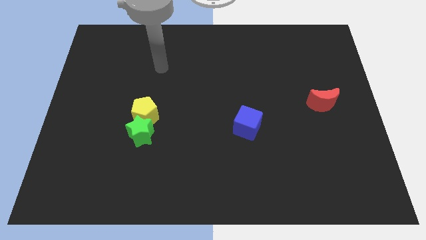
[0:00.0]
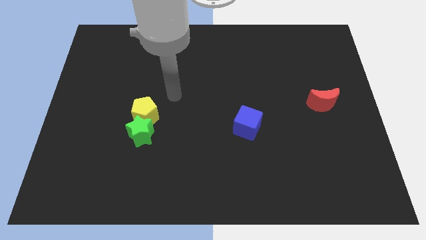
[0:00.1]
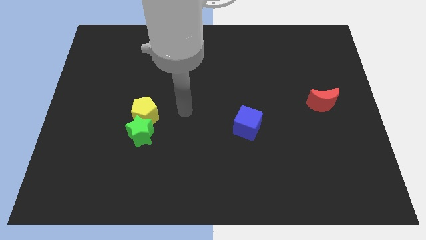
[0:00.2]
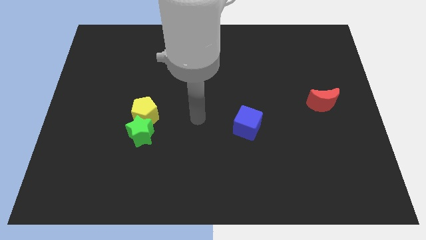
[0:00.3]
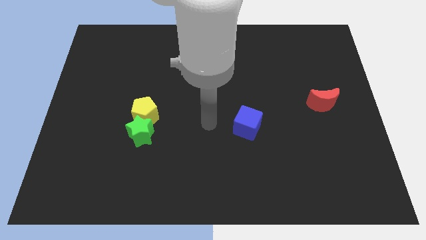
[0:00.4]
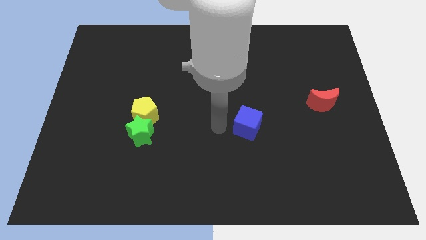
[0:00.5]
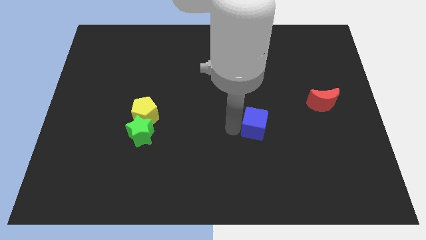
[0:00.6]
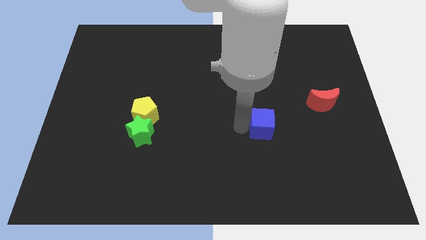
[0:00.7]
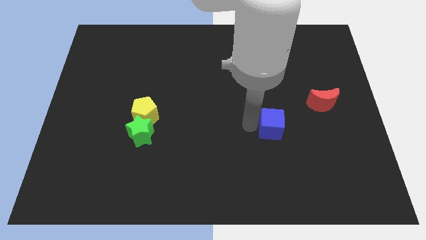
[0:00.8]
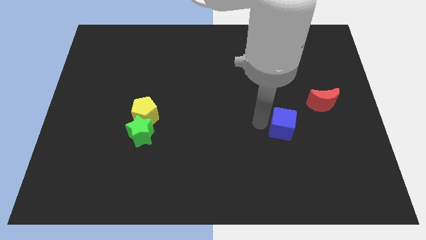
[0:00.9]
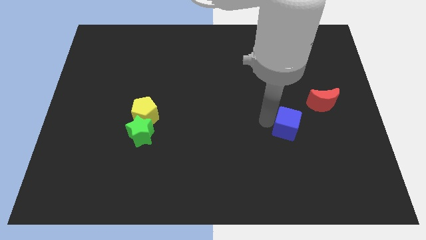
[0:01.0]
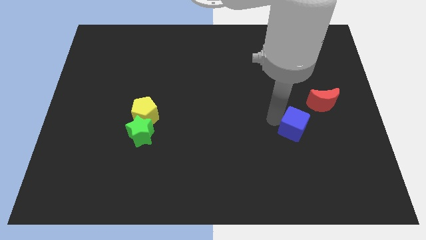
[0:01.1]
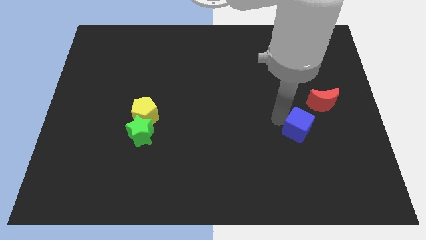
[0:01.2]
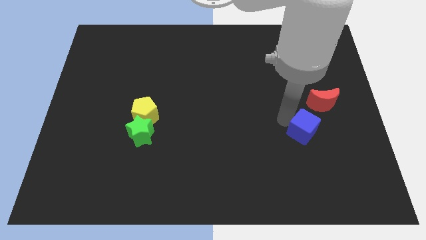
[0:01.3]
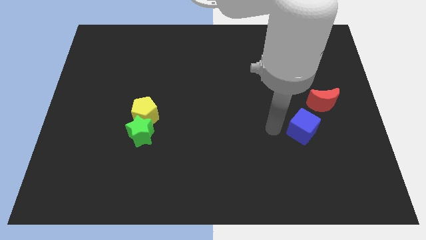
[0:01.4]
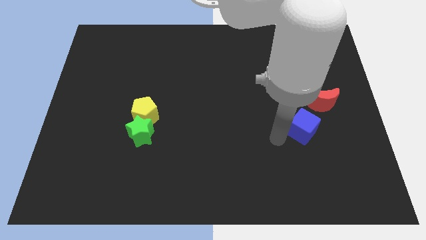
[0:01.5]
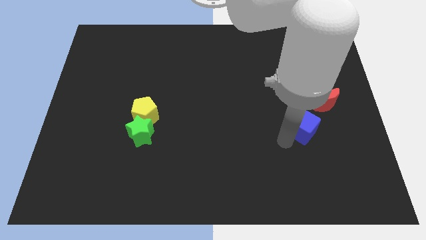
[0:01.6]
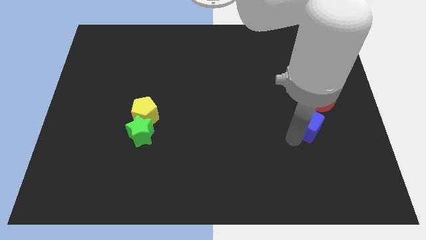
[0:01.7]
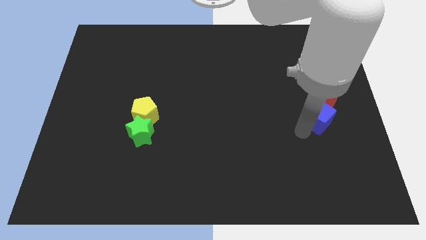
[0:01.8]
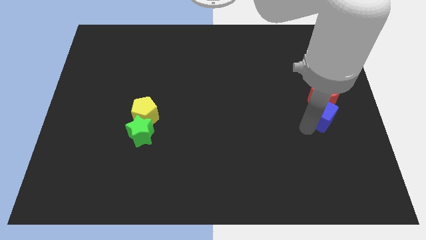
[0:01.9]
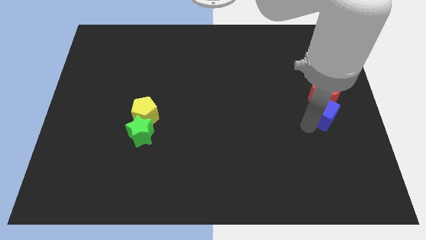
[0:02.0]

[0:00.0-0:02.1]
push the blue cube next to the moon

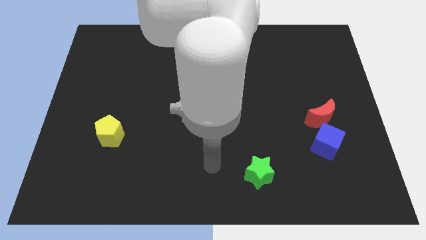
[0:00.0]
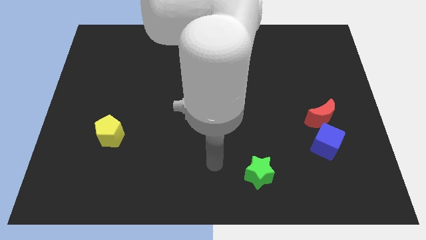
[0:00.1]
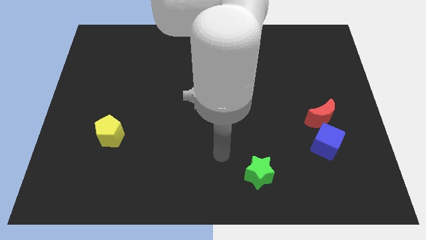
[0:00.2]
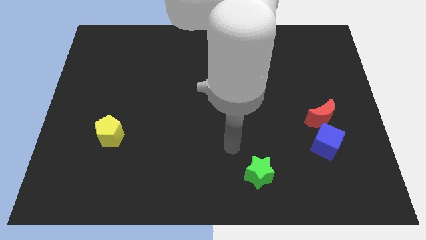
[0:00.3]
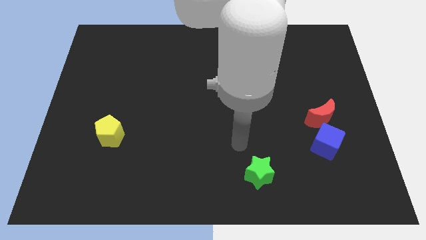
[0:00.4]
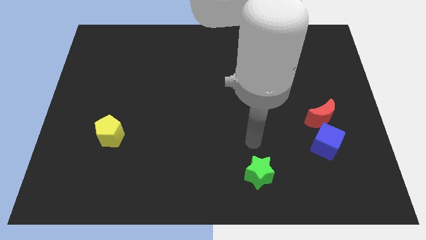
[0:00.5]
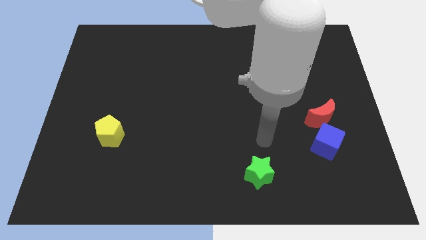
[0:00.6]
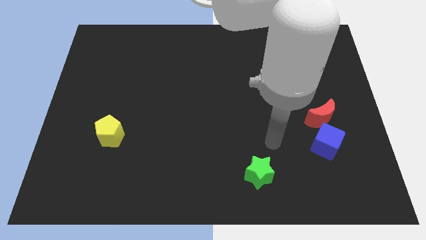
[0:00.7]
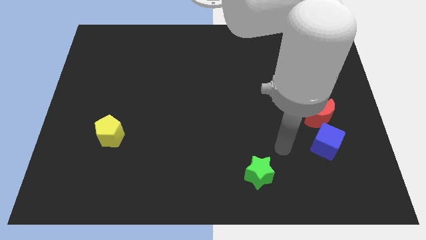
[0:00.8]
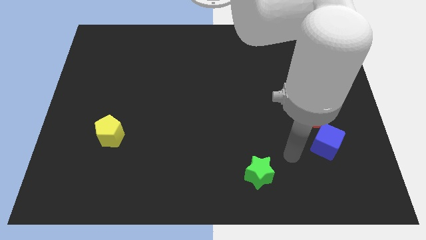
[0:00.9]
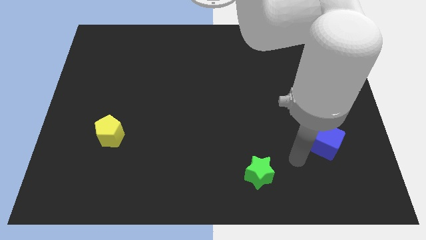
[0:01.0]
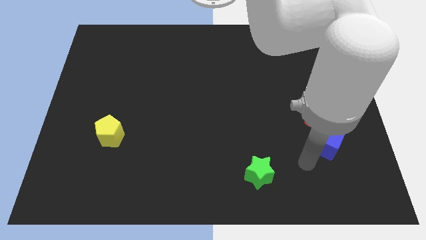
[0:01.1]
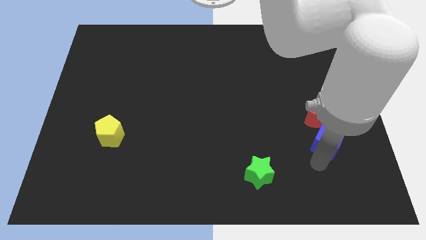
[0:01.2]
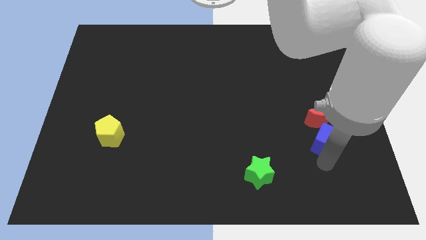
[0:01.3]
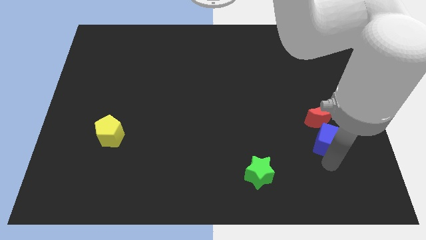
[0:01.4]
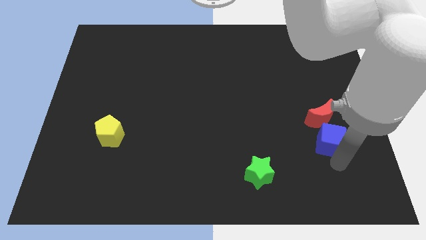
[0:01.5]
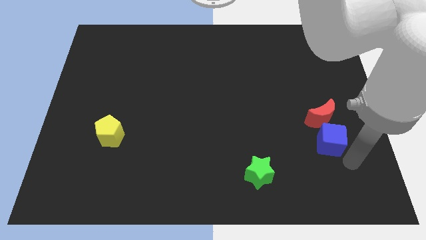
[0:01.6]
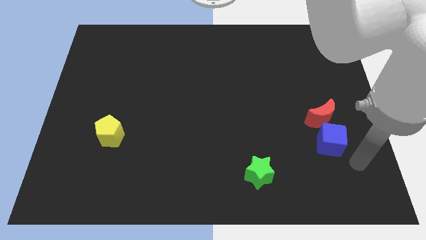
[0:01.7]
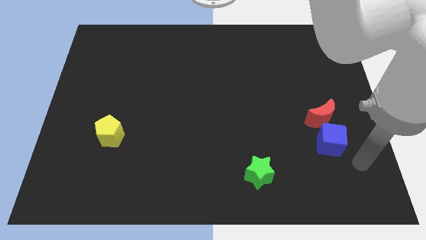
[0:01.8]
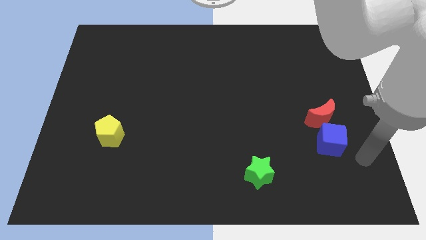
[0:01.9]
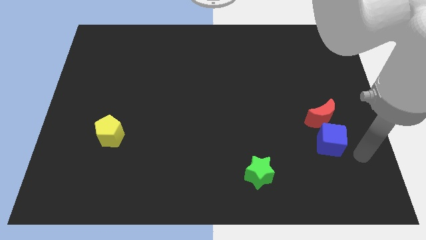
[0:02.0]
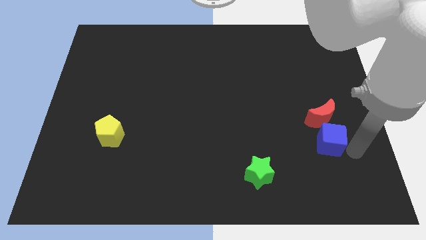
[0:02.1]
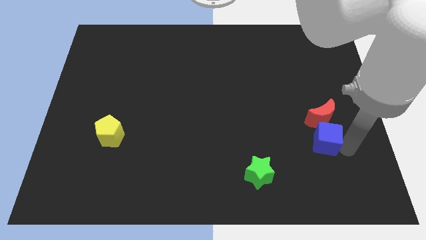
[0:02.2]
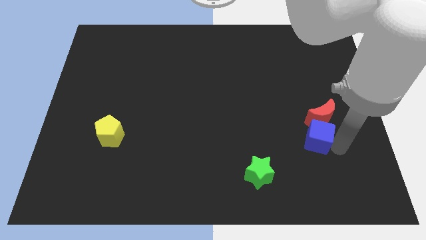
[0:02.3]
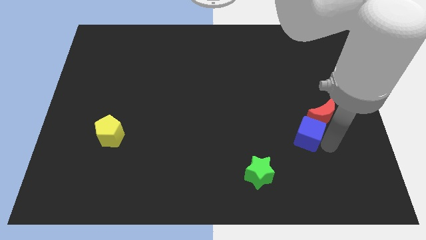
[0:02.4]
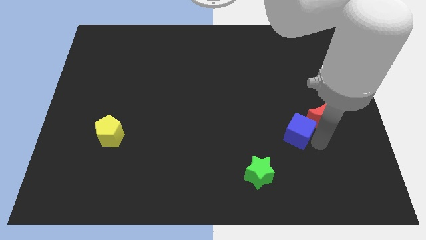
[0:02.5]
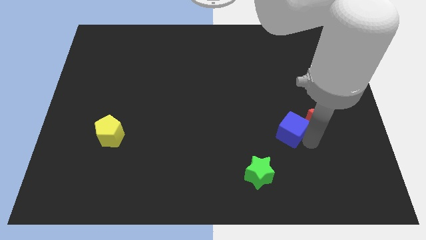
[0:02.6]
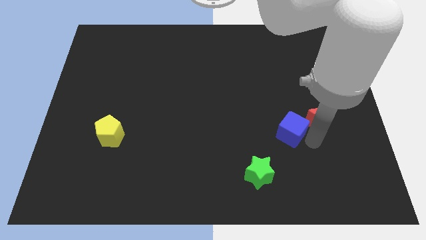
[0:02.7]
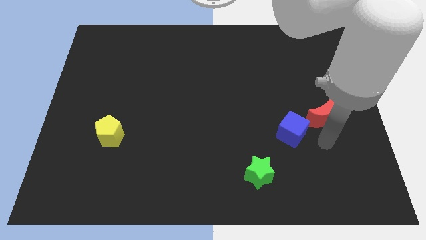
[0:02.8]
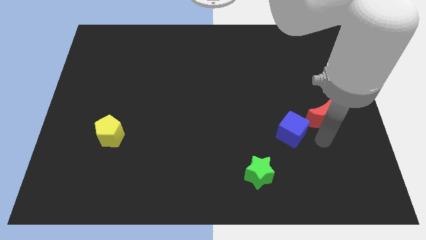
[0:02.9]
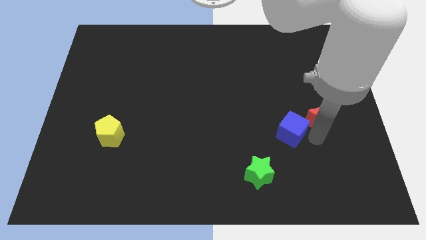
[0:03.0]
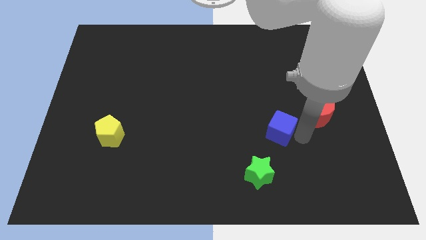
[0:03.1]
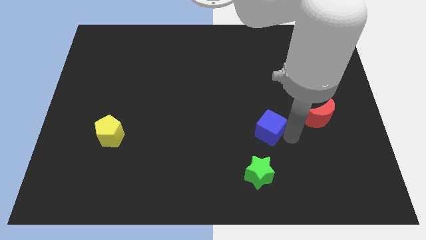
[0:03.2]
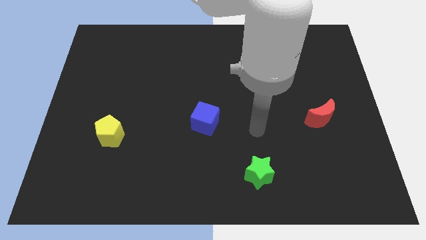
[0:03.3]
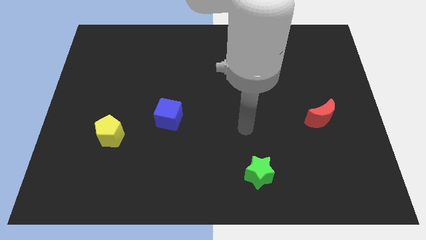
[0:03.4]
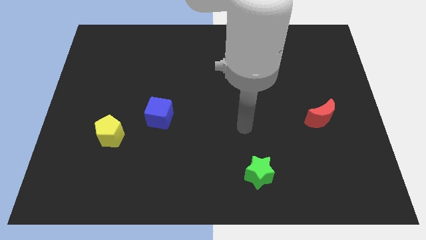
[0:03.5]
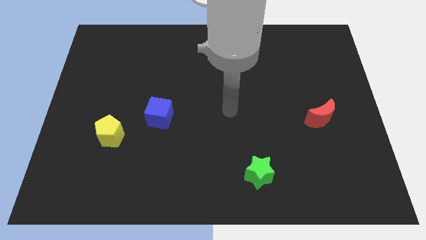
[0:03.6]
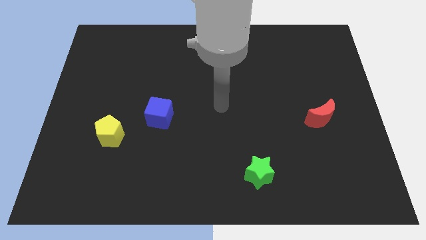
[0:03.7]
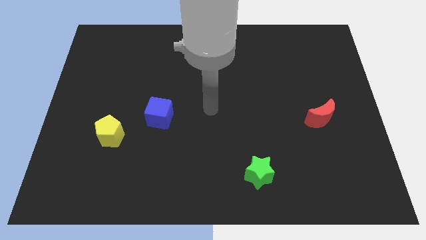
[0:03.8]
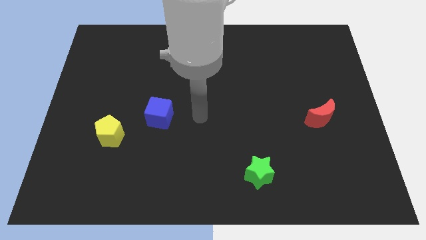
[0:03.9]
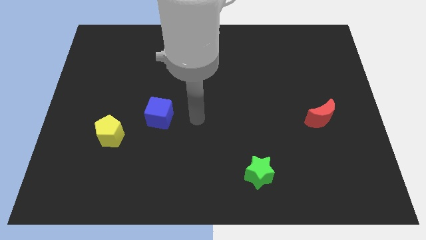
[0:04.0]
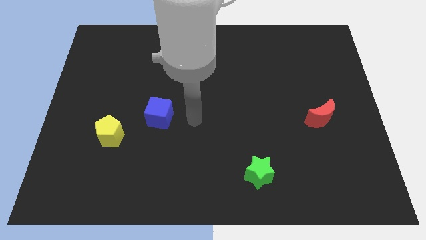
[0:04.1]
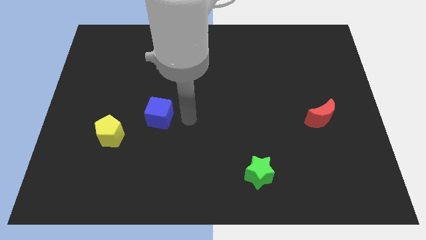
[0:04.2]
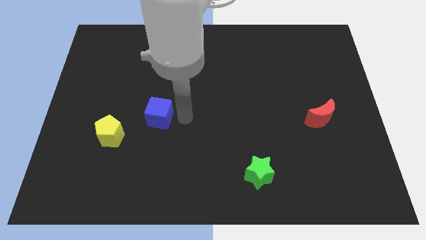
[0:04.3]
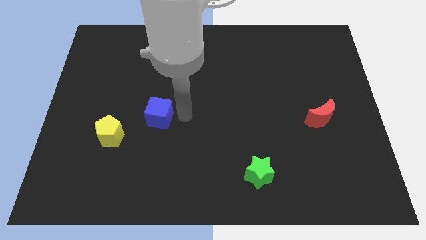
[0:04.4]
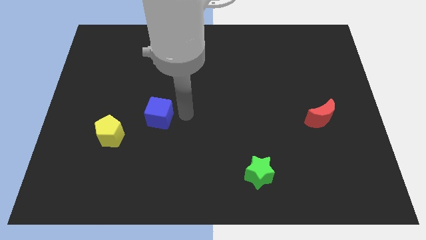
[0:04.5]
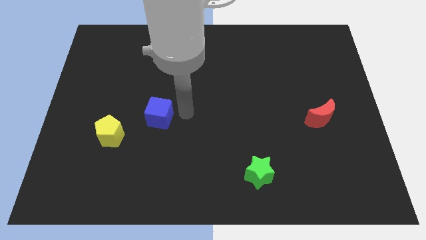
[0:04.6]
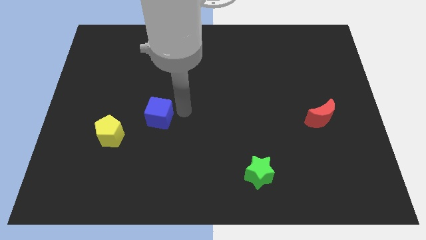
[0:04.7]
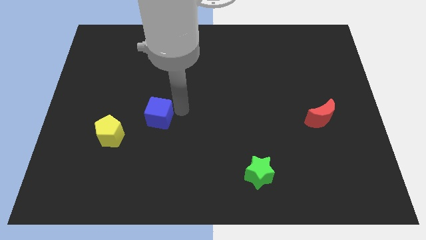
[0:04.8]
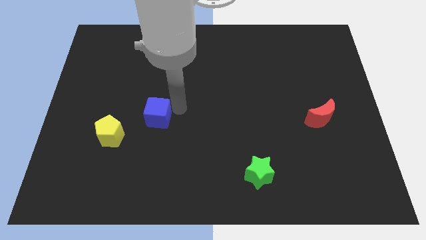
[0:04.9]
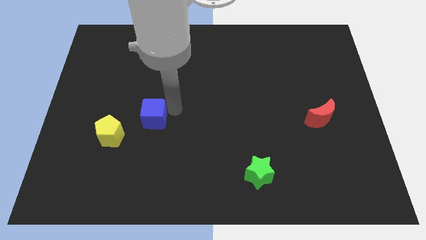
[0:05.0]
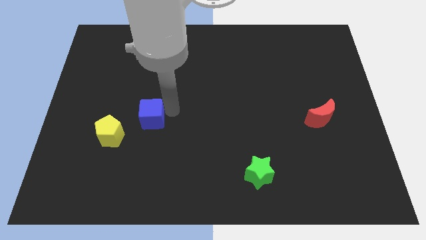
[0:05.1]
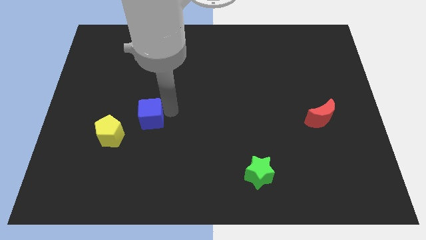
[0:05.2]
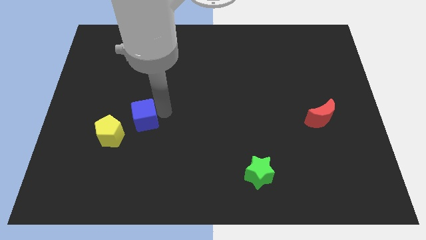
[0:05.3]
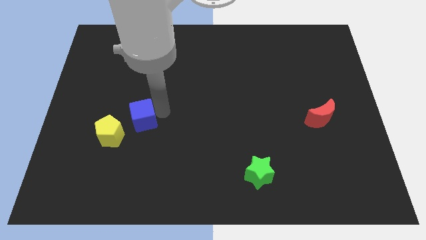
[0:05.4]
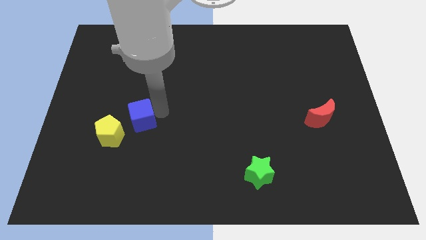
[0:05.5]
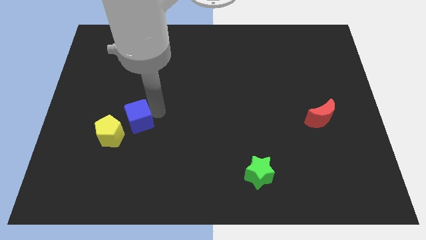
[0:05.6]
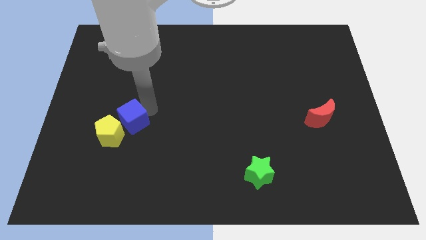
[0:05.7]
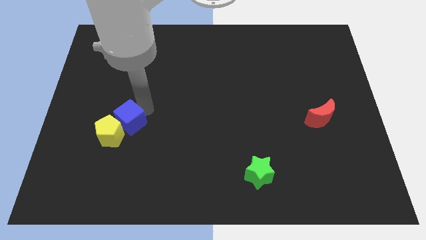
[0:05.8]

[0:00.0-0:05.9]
put the blue block next to the yellow block
